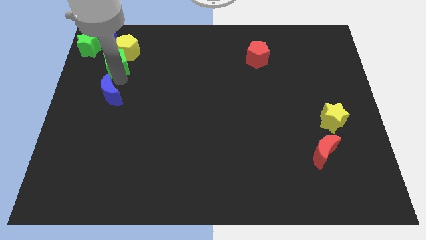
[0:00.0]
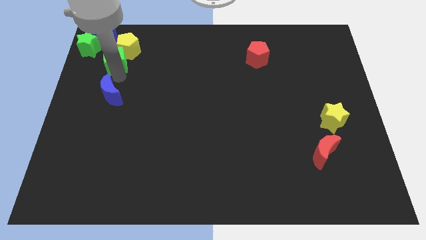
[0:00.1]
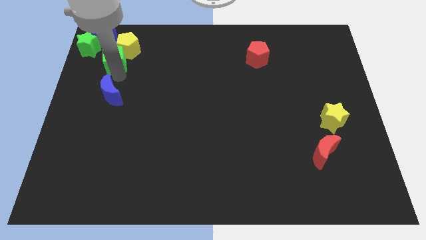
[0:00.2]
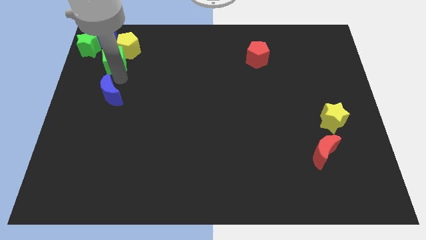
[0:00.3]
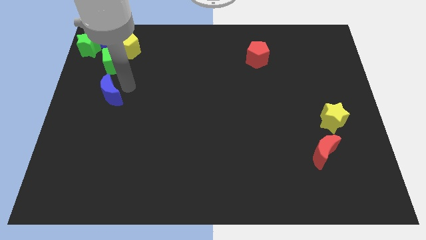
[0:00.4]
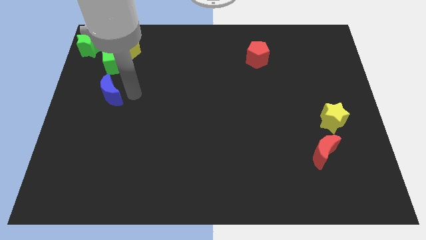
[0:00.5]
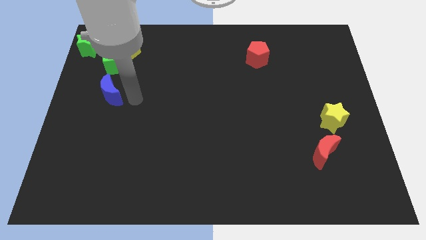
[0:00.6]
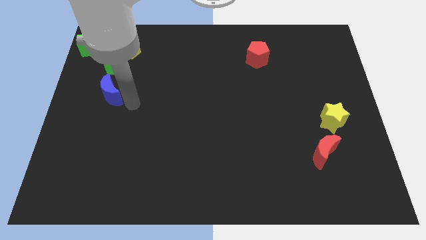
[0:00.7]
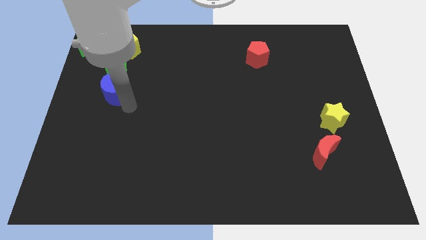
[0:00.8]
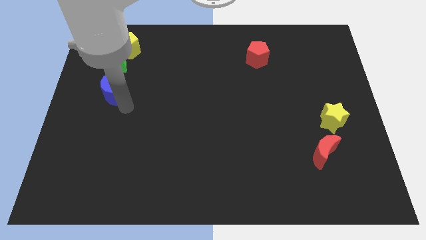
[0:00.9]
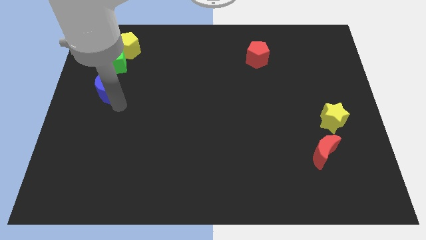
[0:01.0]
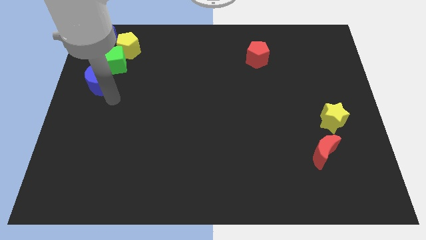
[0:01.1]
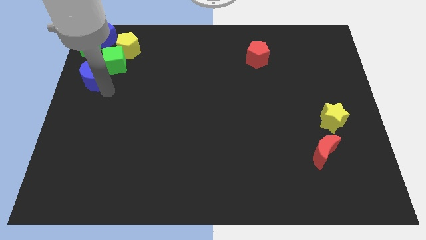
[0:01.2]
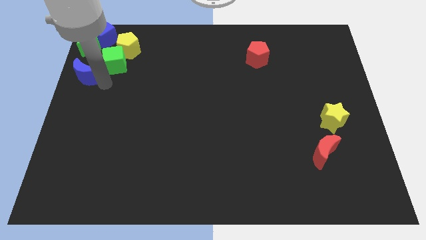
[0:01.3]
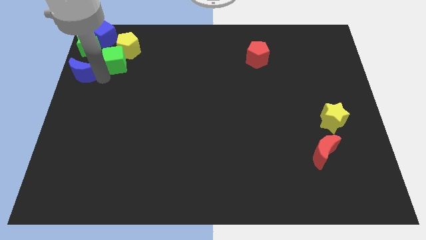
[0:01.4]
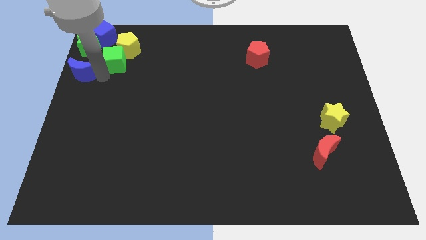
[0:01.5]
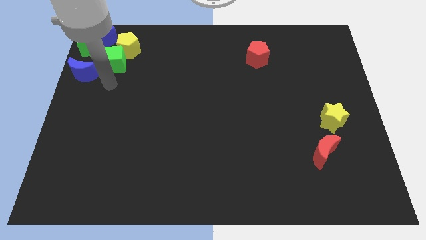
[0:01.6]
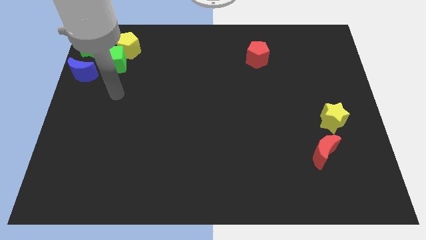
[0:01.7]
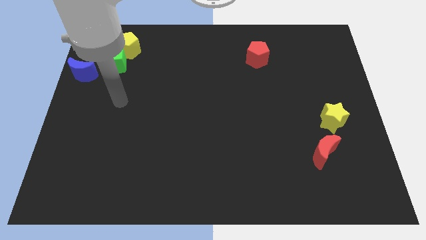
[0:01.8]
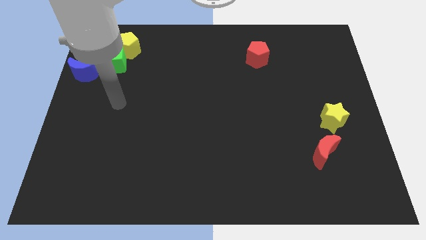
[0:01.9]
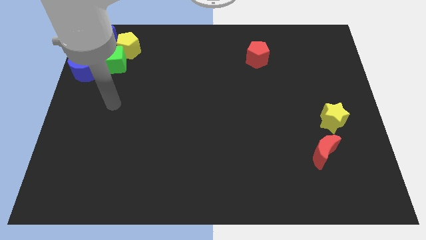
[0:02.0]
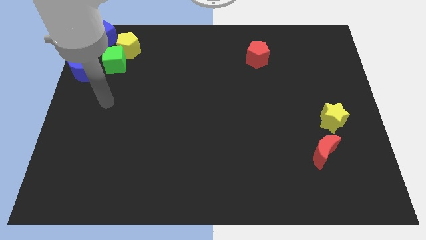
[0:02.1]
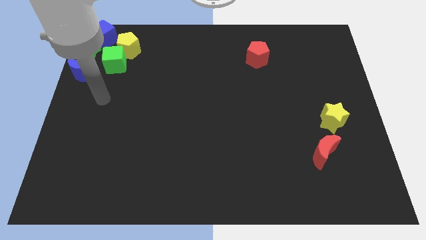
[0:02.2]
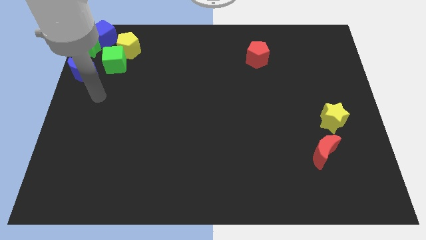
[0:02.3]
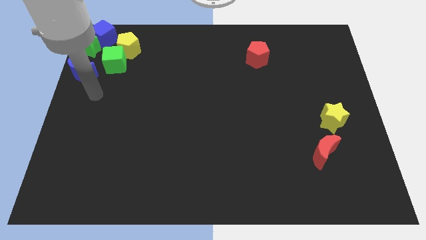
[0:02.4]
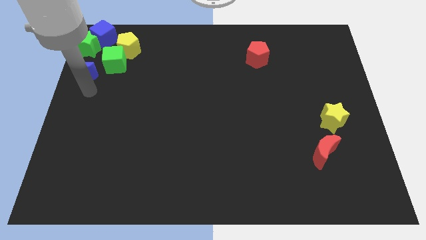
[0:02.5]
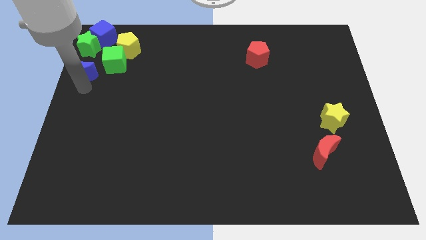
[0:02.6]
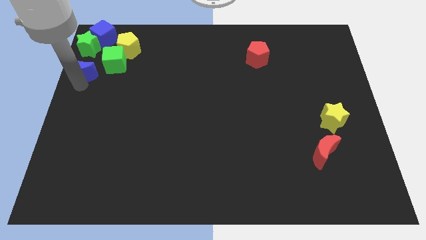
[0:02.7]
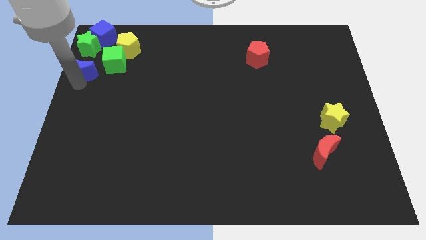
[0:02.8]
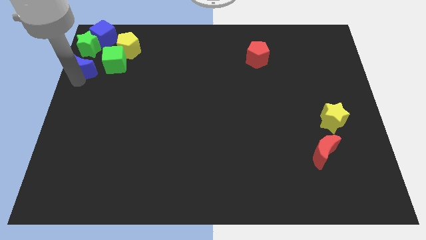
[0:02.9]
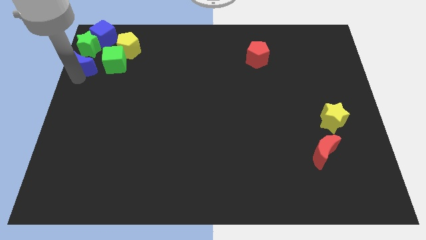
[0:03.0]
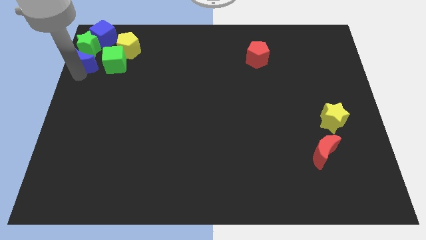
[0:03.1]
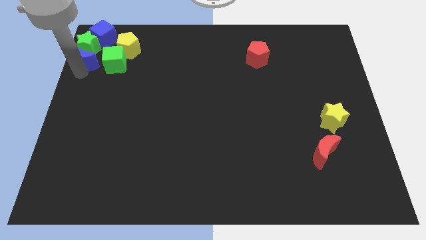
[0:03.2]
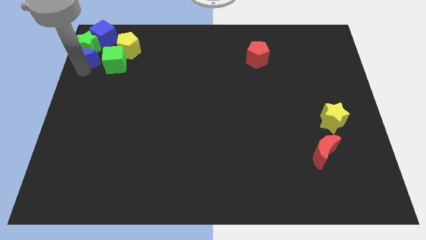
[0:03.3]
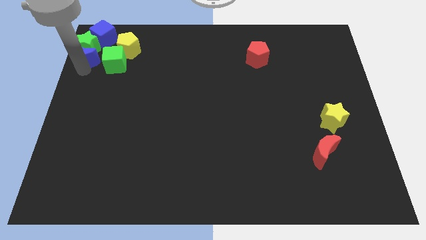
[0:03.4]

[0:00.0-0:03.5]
move the blue moon to the bottom of the green star

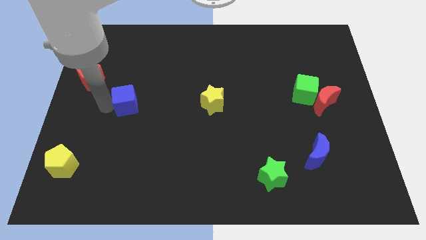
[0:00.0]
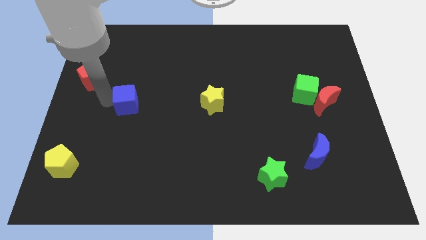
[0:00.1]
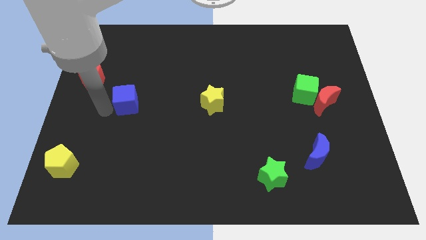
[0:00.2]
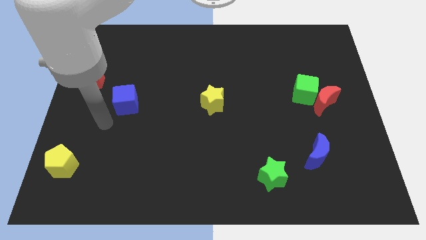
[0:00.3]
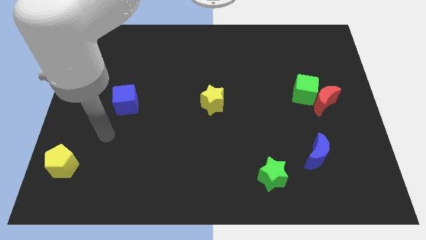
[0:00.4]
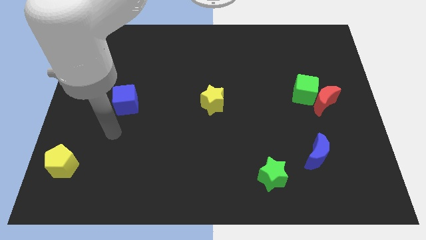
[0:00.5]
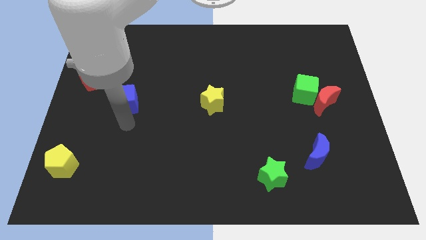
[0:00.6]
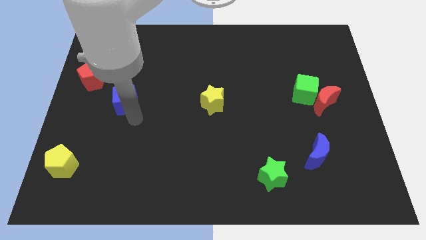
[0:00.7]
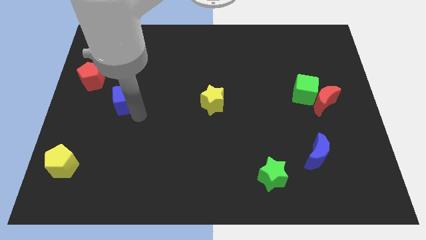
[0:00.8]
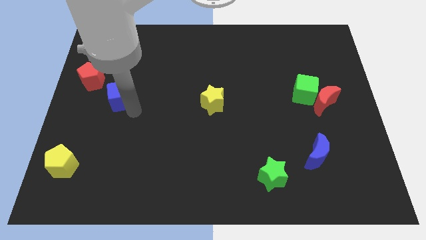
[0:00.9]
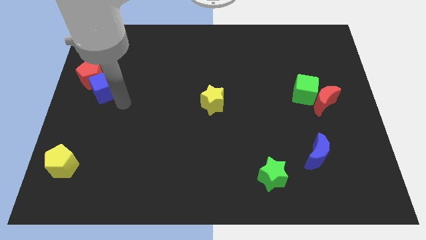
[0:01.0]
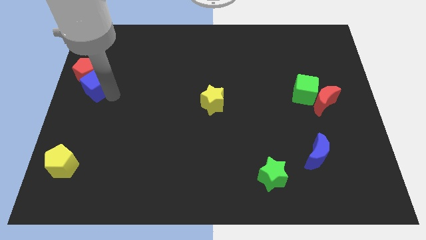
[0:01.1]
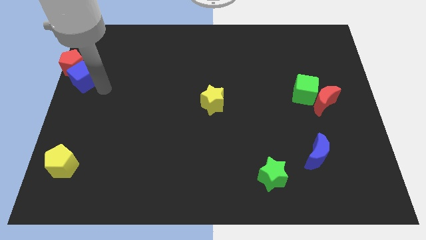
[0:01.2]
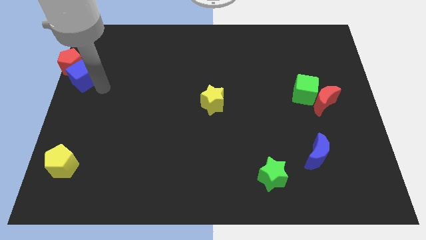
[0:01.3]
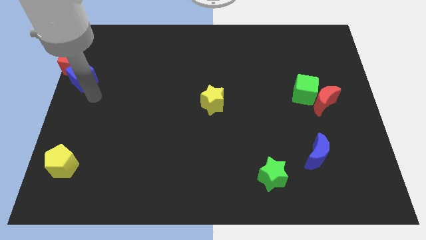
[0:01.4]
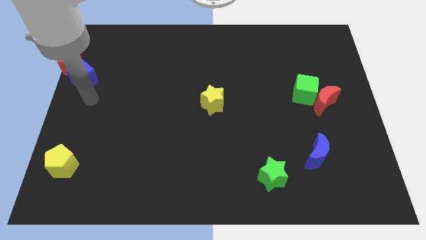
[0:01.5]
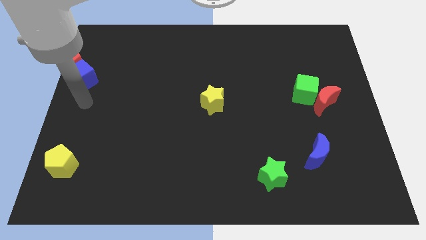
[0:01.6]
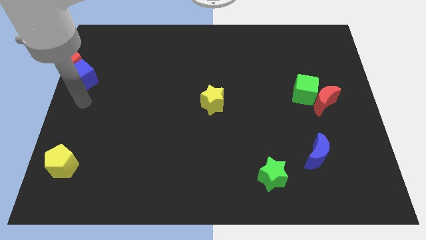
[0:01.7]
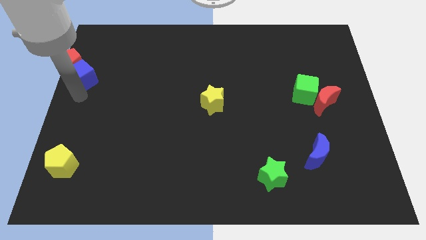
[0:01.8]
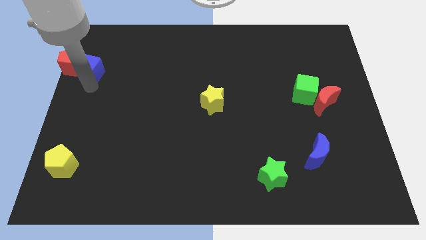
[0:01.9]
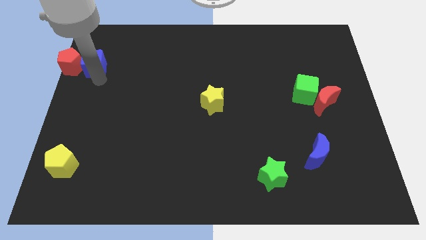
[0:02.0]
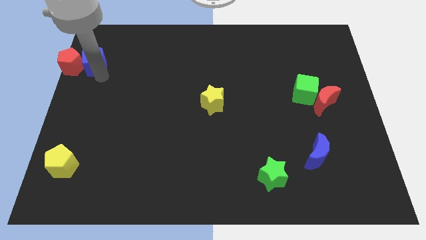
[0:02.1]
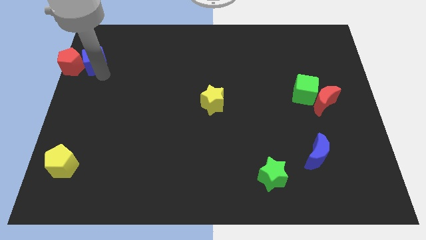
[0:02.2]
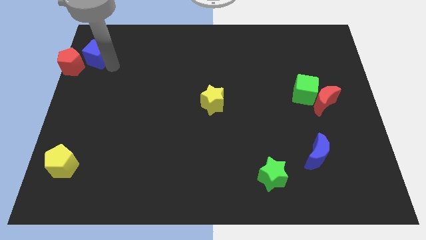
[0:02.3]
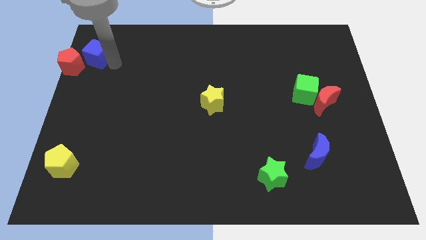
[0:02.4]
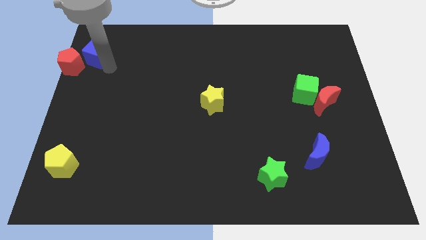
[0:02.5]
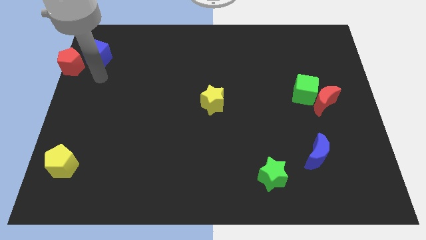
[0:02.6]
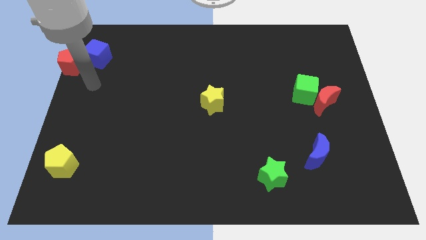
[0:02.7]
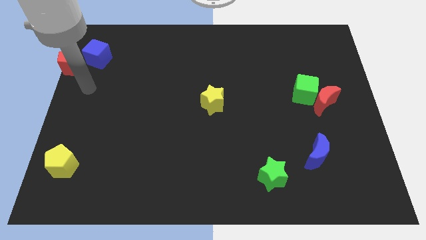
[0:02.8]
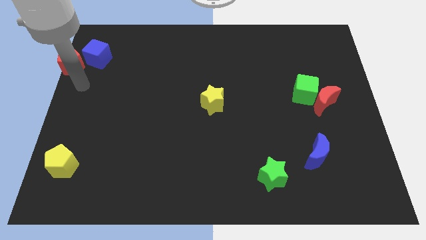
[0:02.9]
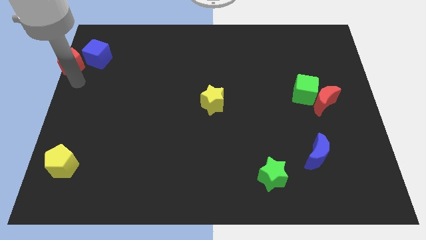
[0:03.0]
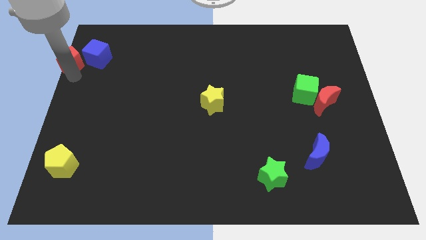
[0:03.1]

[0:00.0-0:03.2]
push red pentagon blue cube to the center left

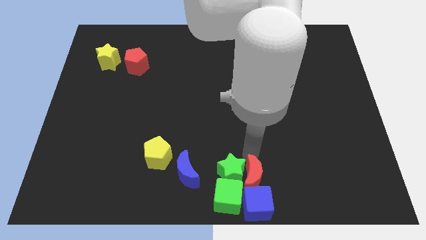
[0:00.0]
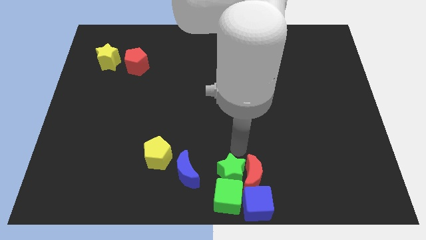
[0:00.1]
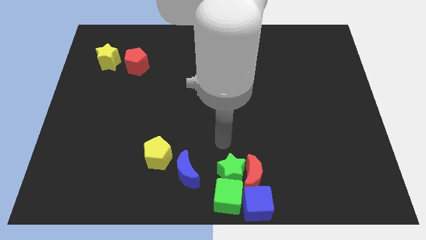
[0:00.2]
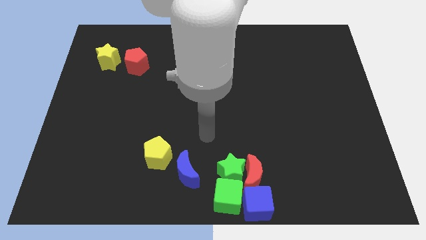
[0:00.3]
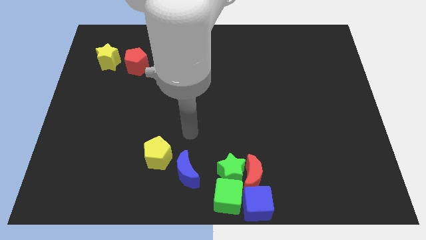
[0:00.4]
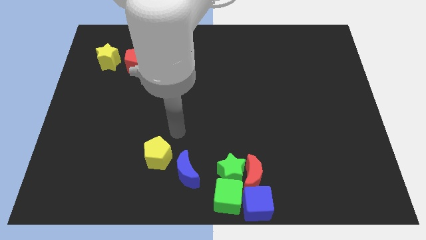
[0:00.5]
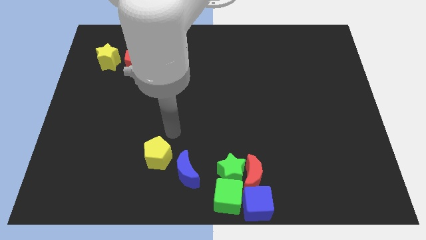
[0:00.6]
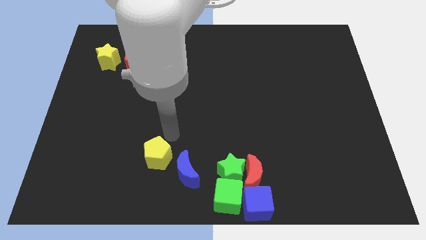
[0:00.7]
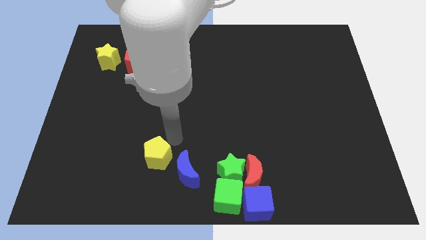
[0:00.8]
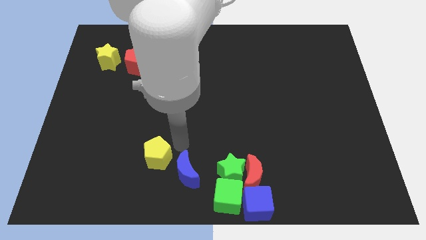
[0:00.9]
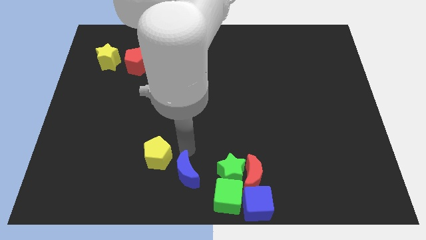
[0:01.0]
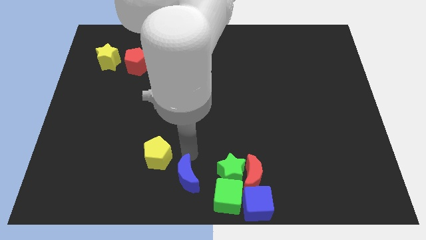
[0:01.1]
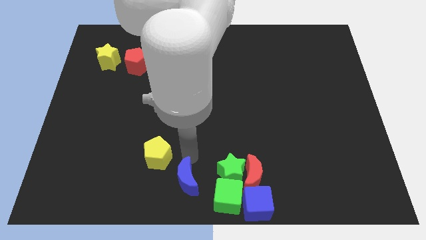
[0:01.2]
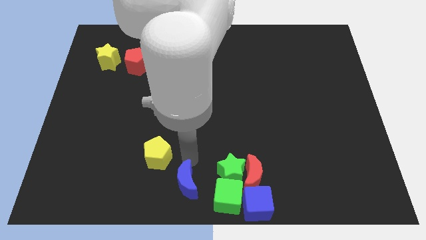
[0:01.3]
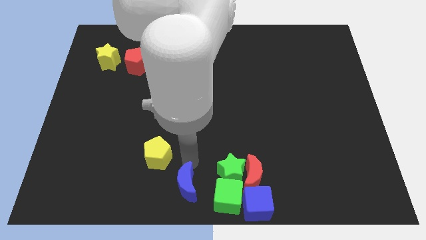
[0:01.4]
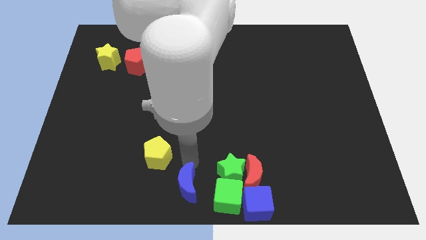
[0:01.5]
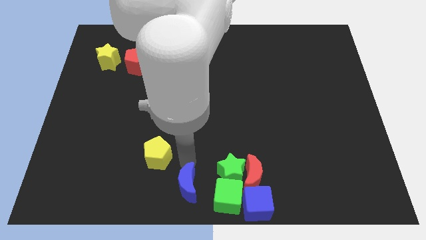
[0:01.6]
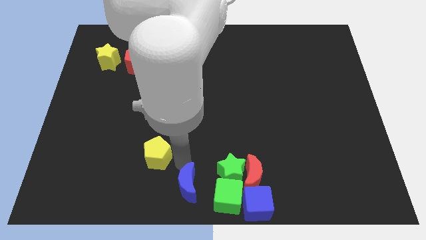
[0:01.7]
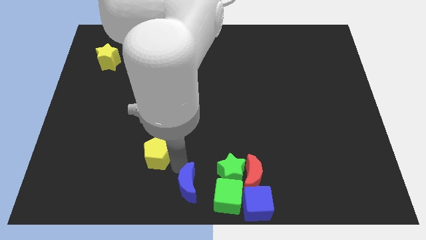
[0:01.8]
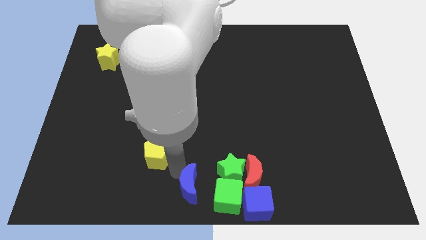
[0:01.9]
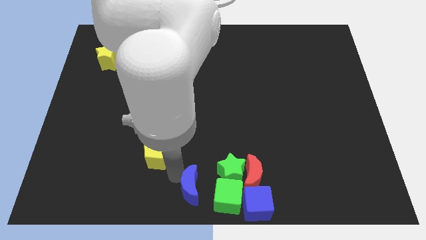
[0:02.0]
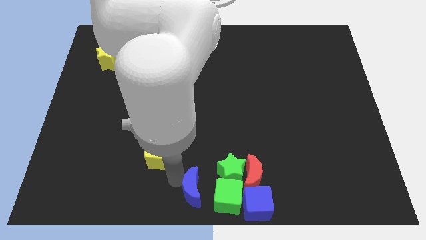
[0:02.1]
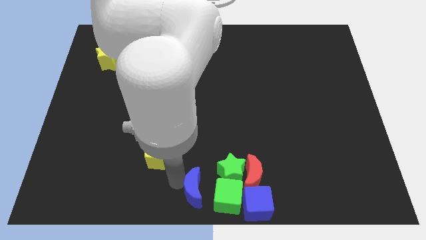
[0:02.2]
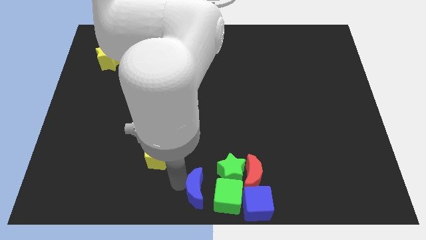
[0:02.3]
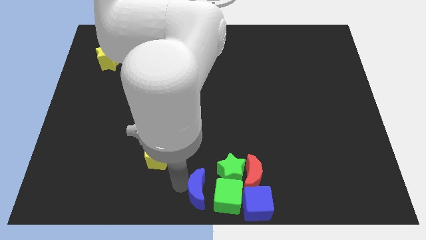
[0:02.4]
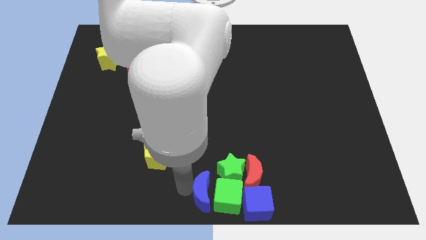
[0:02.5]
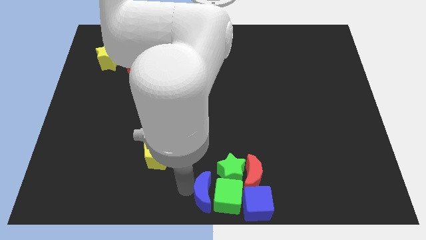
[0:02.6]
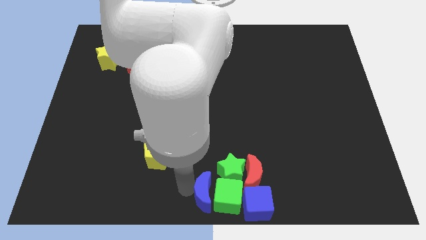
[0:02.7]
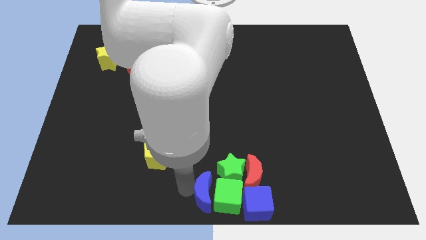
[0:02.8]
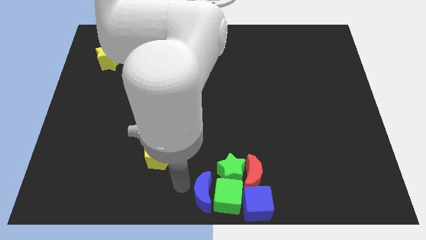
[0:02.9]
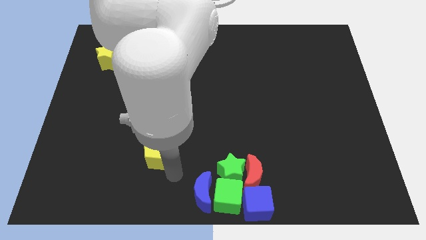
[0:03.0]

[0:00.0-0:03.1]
move the blue crescent close to the left side of the green cube
